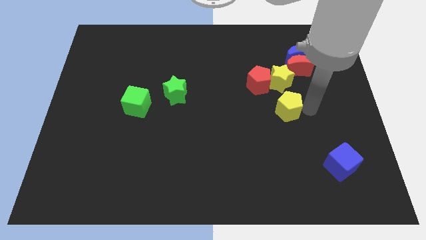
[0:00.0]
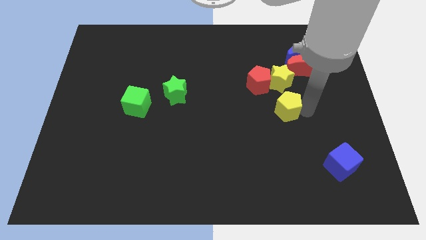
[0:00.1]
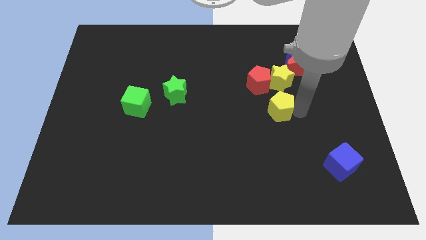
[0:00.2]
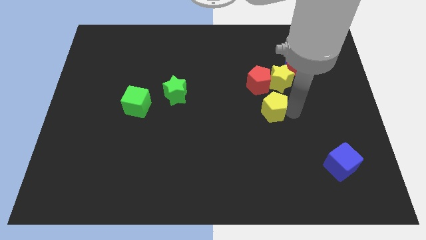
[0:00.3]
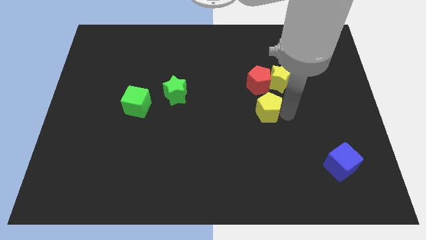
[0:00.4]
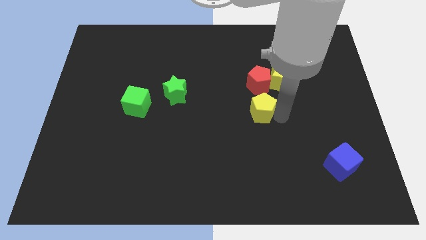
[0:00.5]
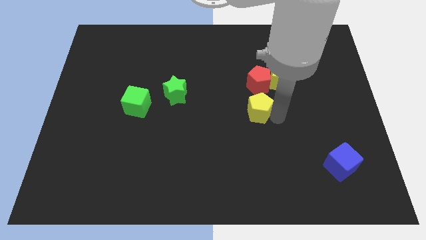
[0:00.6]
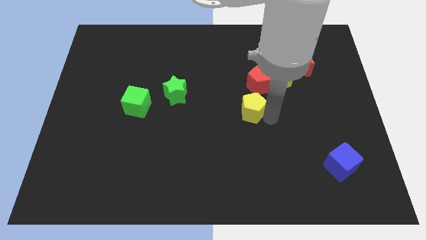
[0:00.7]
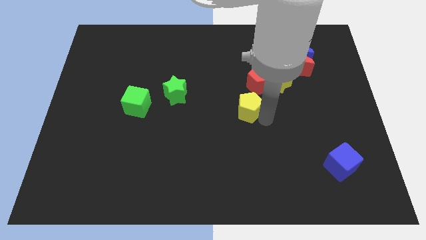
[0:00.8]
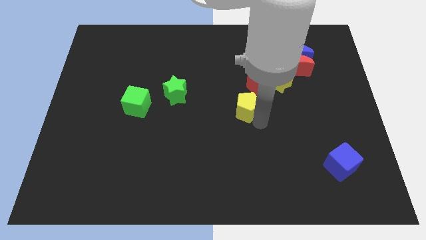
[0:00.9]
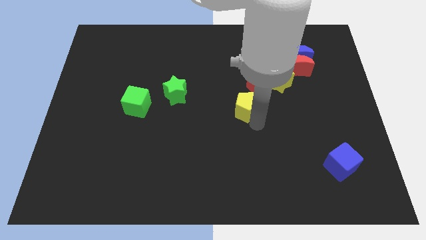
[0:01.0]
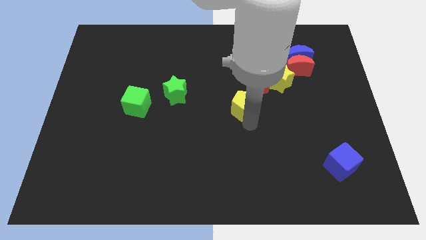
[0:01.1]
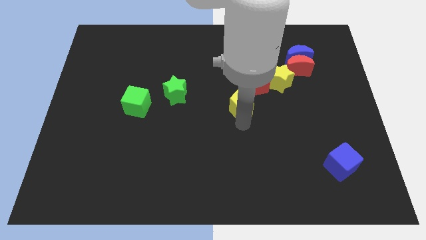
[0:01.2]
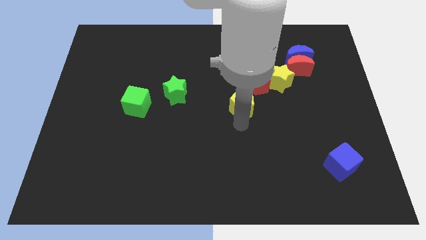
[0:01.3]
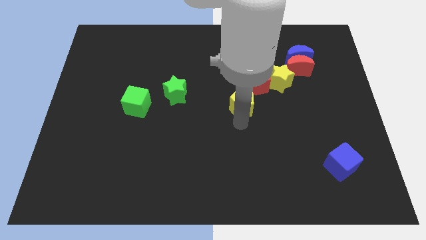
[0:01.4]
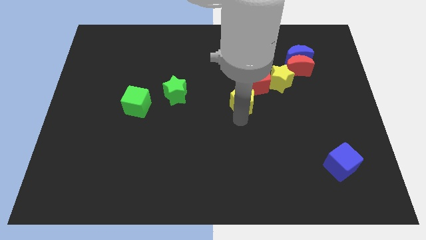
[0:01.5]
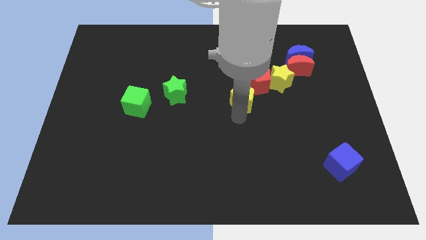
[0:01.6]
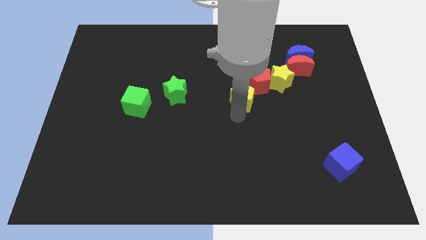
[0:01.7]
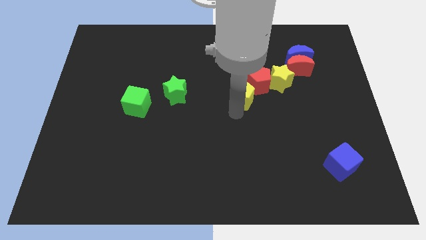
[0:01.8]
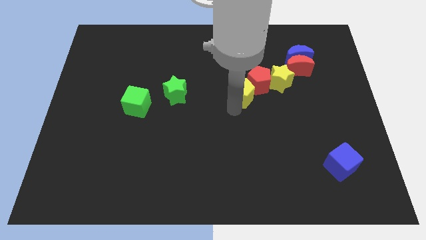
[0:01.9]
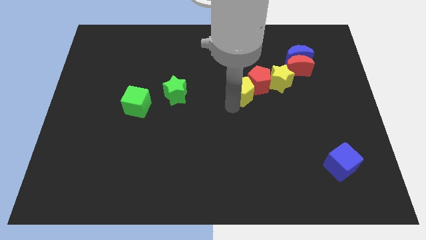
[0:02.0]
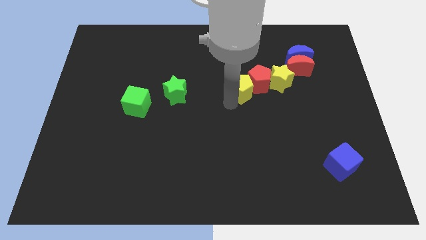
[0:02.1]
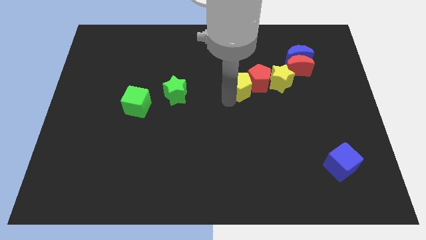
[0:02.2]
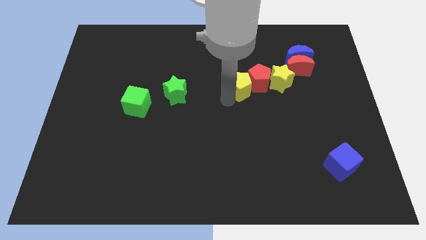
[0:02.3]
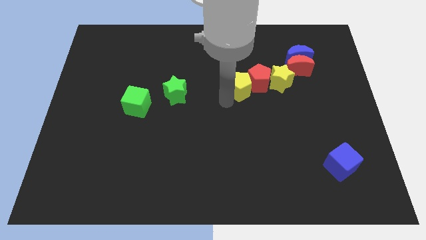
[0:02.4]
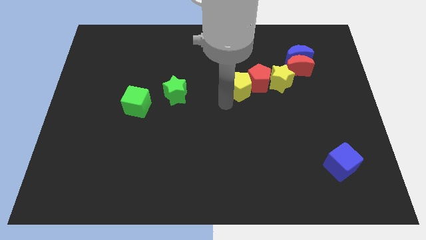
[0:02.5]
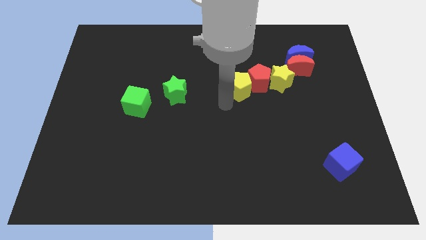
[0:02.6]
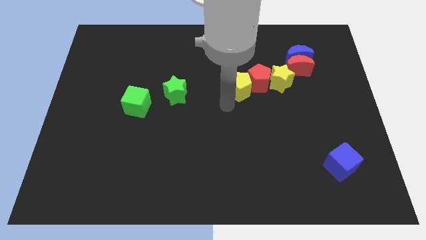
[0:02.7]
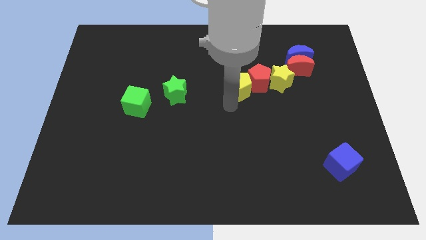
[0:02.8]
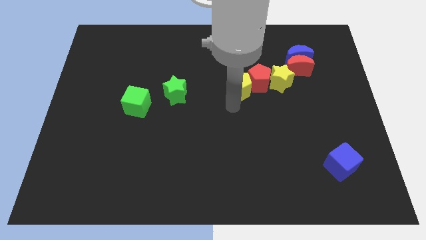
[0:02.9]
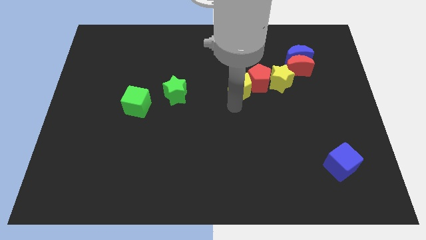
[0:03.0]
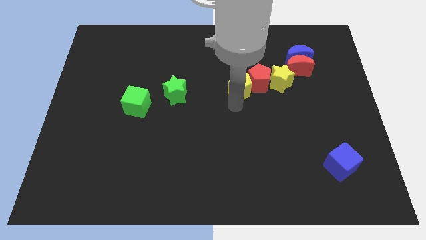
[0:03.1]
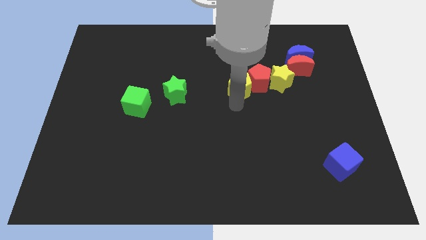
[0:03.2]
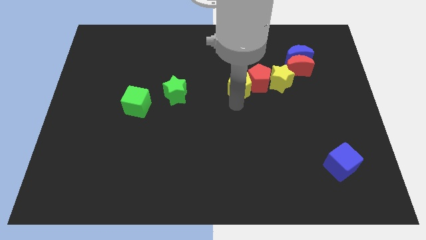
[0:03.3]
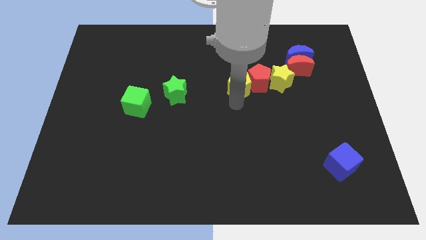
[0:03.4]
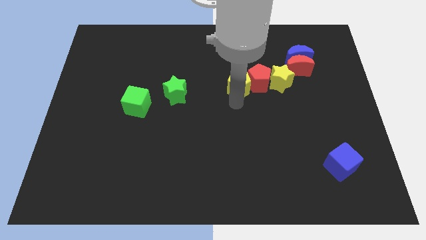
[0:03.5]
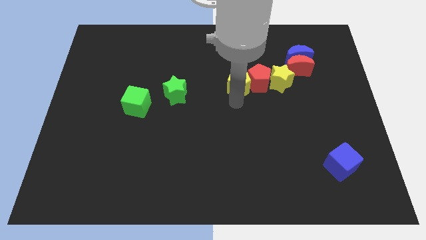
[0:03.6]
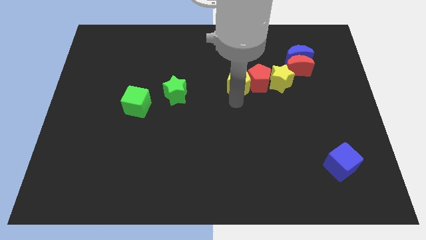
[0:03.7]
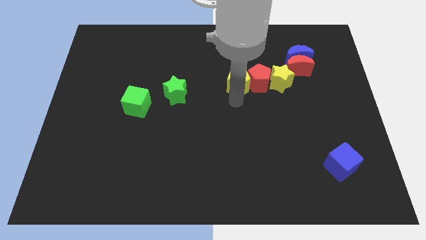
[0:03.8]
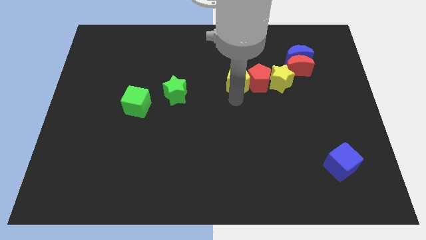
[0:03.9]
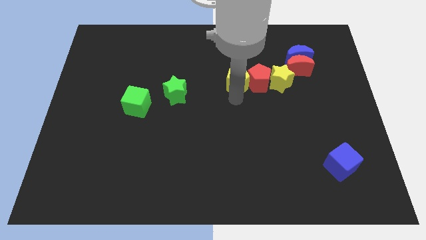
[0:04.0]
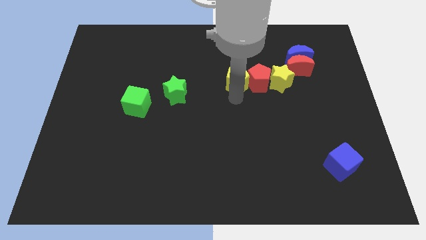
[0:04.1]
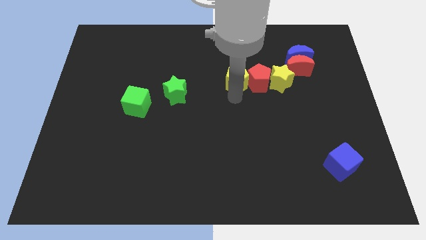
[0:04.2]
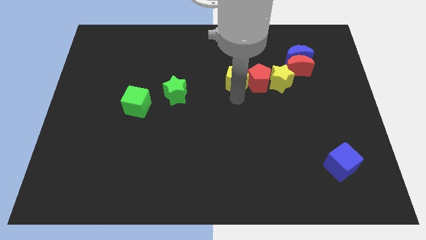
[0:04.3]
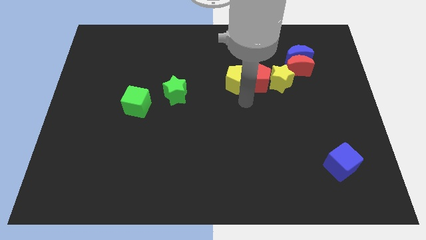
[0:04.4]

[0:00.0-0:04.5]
push the yellow pentagon towards the left of red pentagon

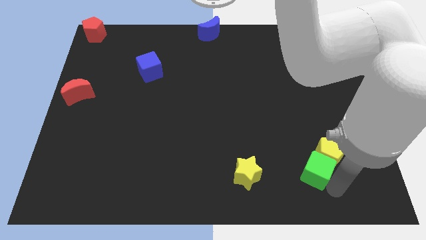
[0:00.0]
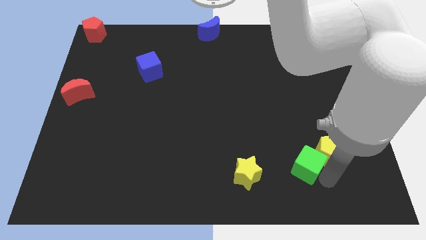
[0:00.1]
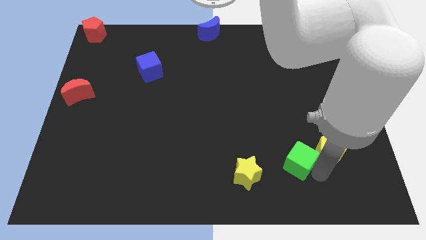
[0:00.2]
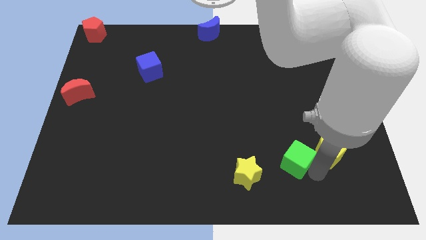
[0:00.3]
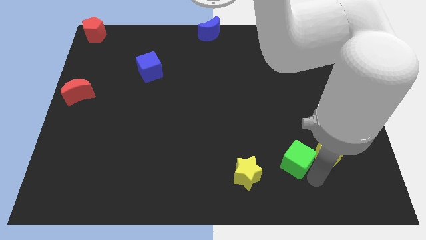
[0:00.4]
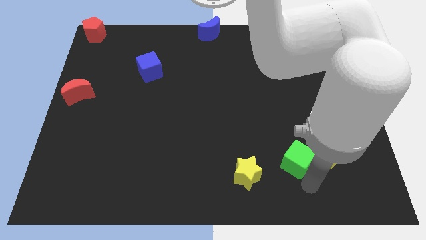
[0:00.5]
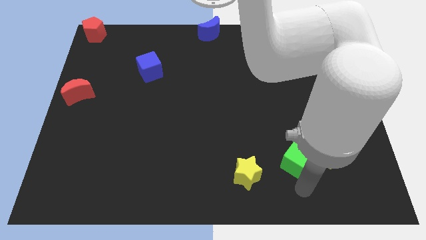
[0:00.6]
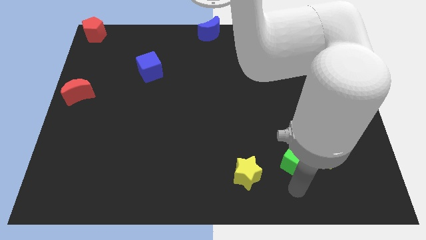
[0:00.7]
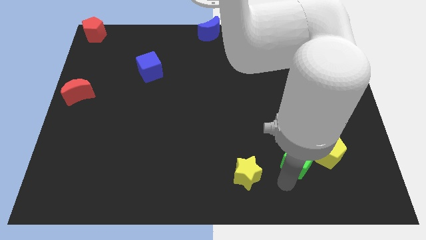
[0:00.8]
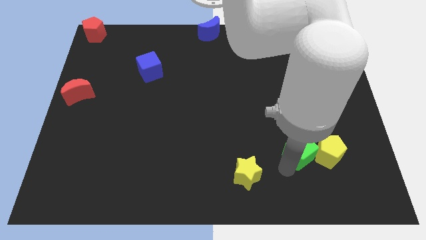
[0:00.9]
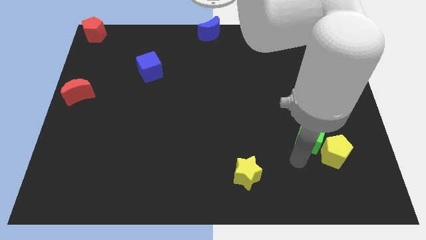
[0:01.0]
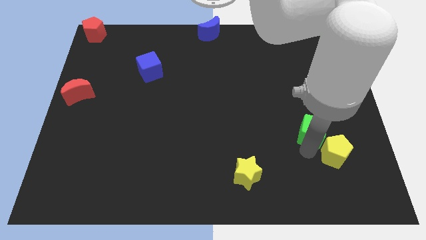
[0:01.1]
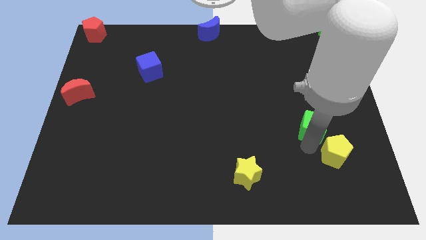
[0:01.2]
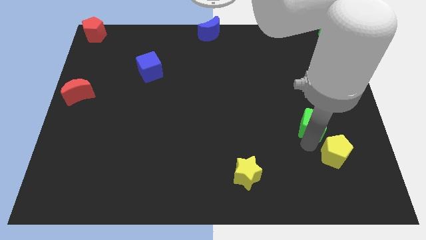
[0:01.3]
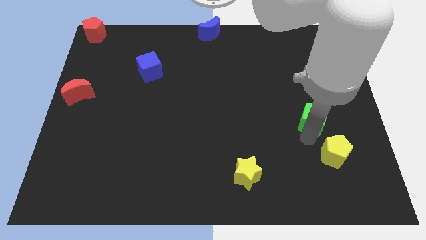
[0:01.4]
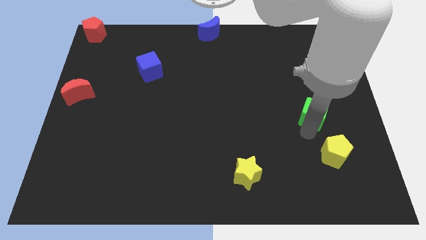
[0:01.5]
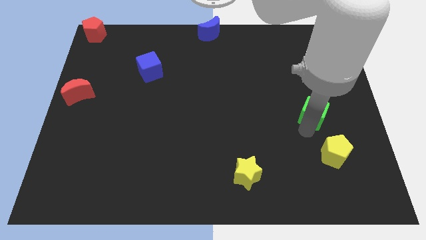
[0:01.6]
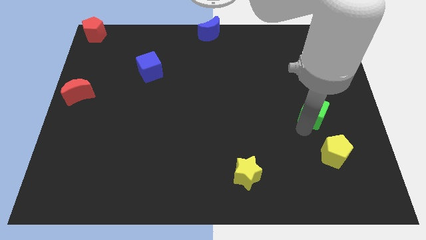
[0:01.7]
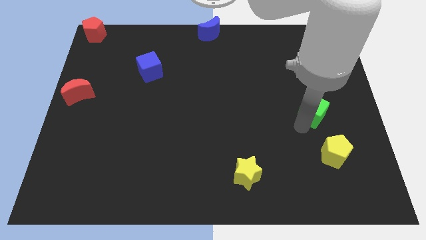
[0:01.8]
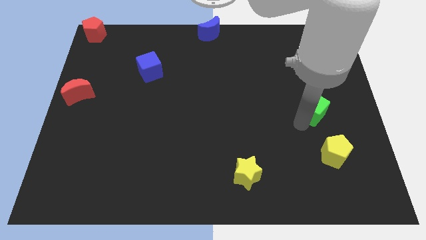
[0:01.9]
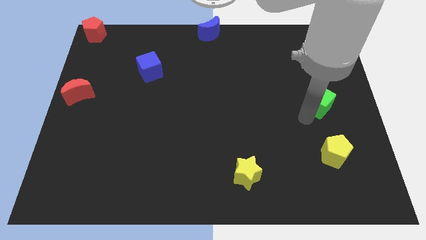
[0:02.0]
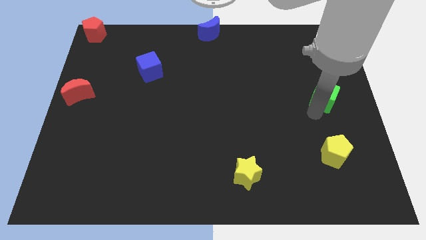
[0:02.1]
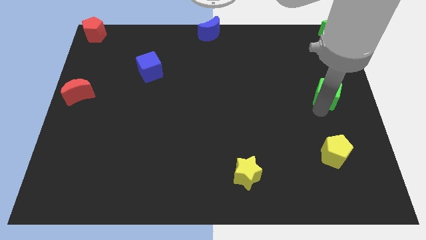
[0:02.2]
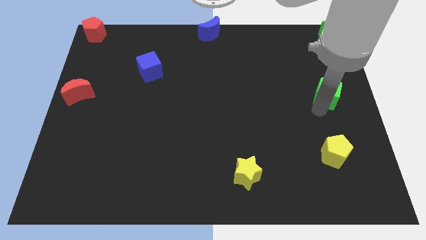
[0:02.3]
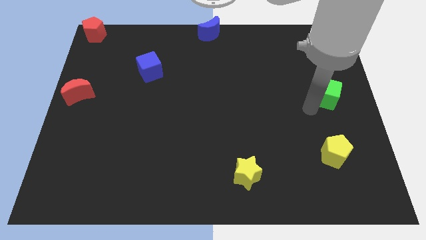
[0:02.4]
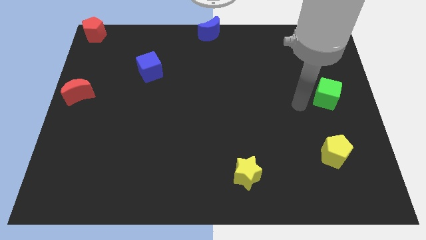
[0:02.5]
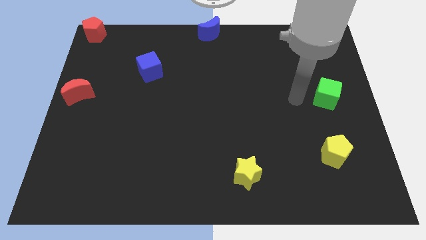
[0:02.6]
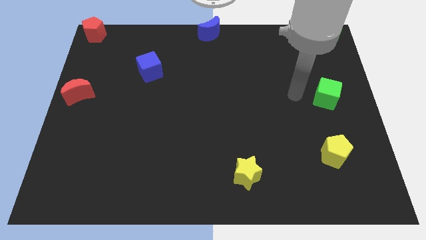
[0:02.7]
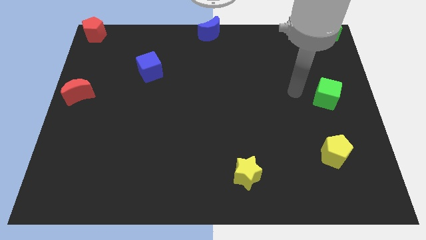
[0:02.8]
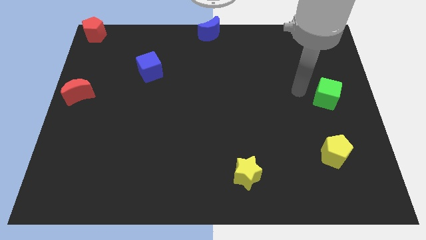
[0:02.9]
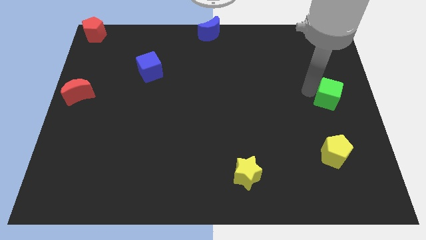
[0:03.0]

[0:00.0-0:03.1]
move the green cube to the right center

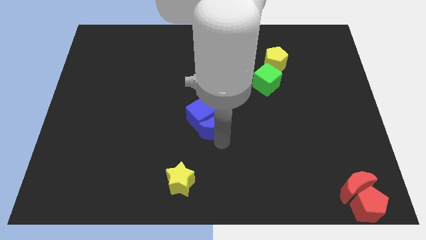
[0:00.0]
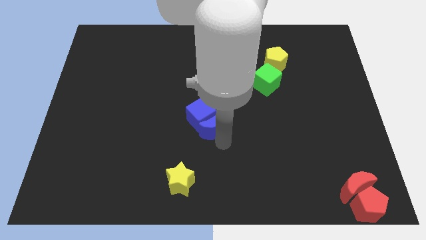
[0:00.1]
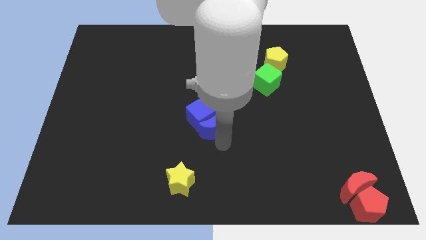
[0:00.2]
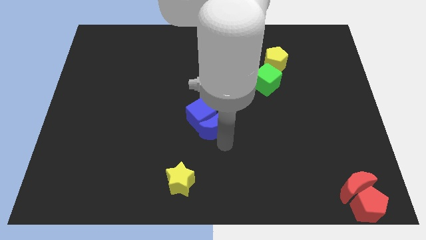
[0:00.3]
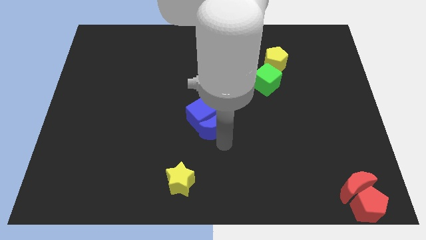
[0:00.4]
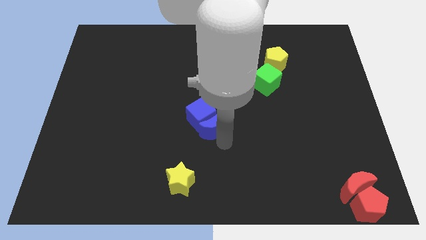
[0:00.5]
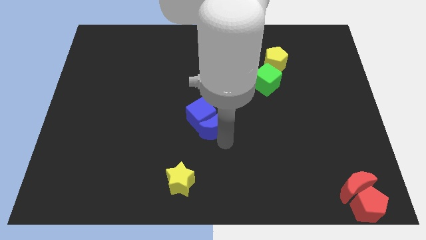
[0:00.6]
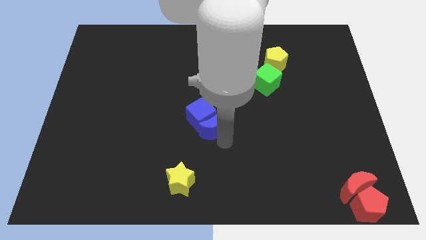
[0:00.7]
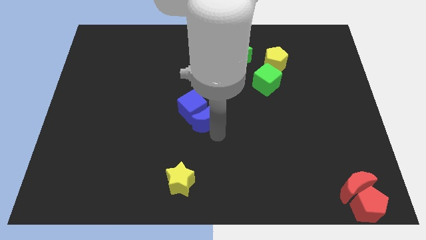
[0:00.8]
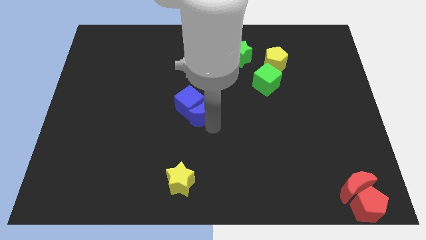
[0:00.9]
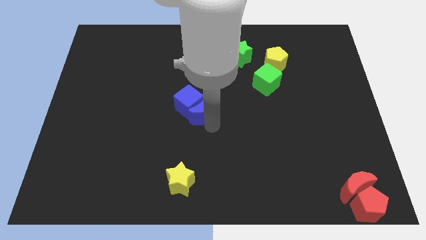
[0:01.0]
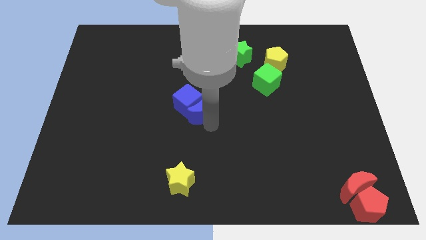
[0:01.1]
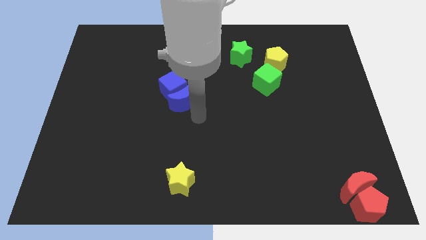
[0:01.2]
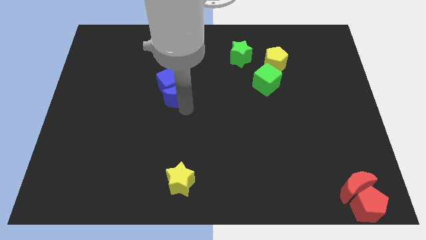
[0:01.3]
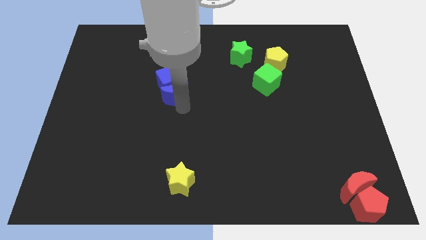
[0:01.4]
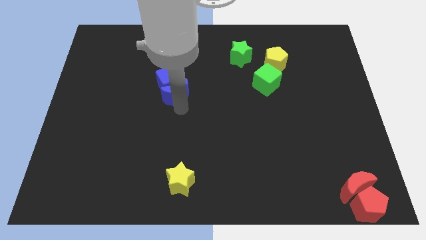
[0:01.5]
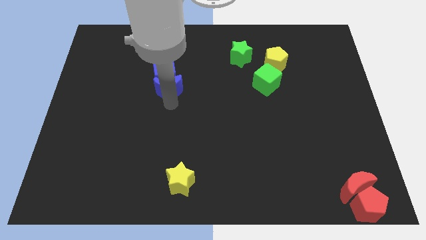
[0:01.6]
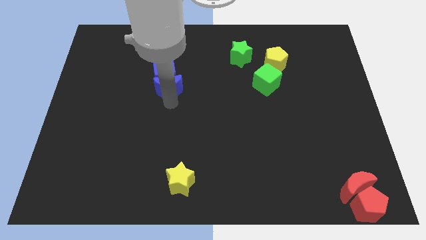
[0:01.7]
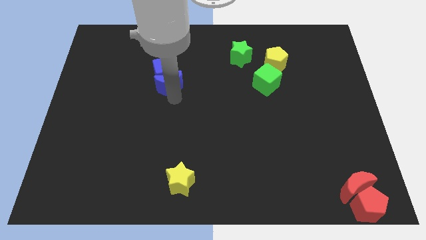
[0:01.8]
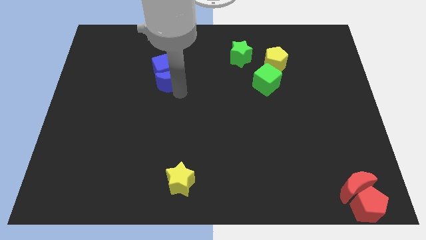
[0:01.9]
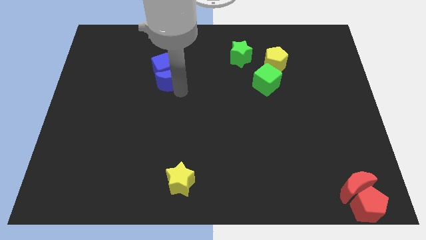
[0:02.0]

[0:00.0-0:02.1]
push the blue blocks to the top center
